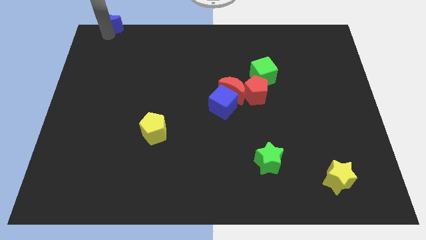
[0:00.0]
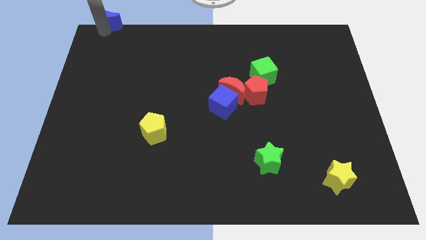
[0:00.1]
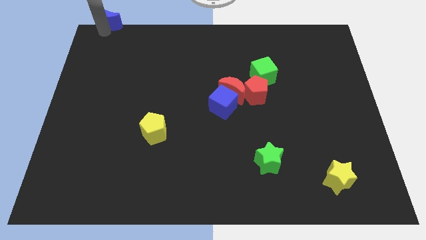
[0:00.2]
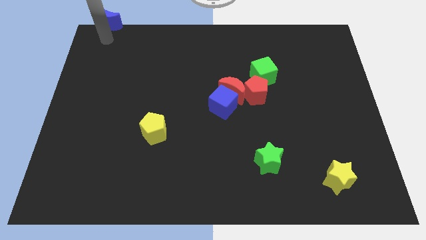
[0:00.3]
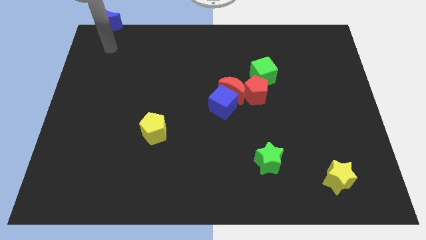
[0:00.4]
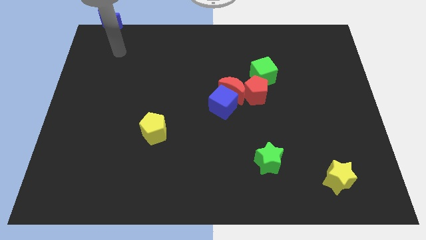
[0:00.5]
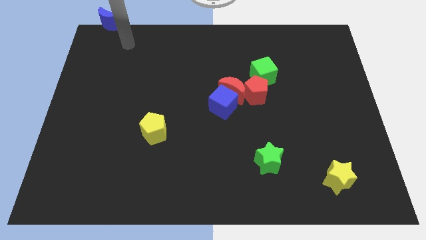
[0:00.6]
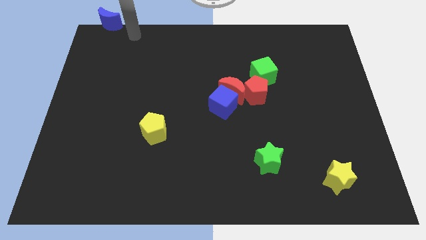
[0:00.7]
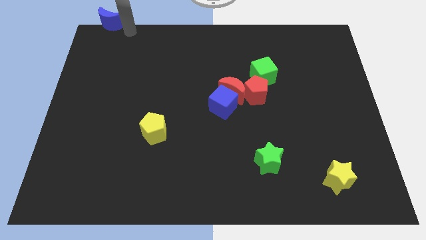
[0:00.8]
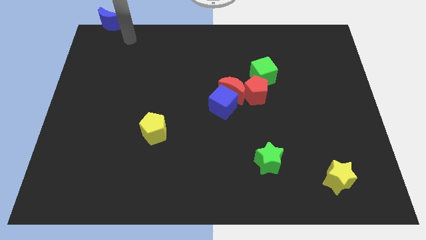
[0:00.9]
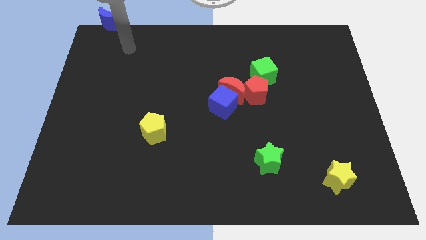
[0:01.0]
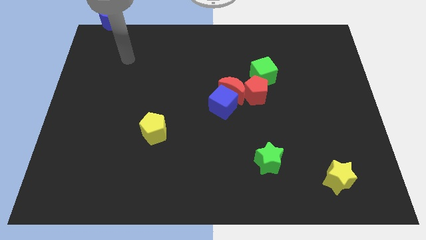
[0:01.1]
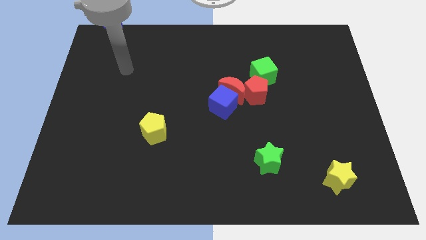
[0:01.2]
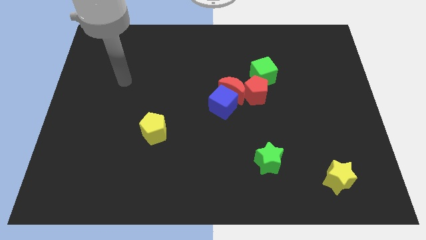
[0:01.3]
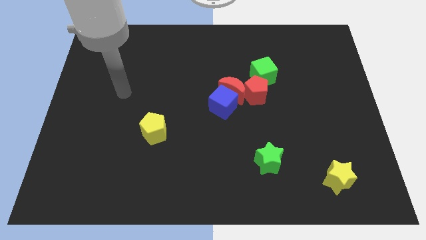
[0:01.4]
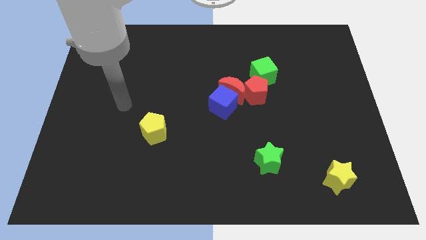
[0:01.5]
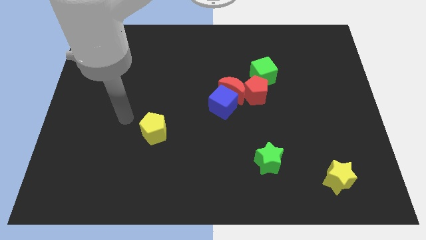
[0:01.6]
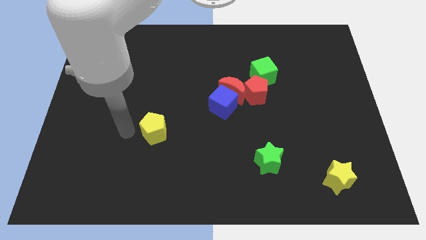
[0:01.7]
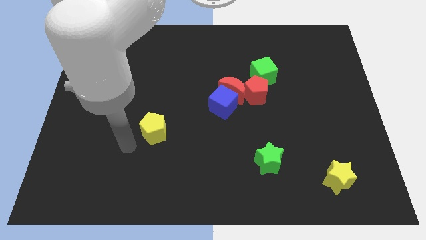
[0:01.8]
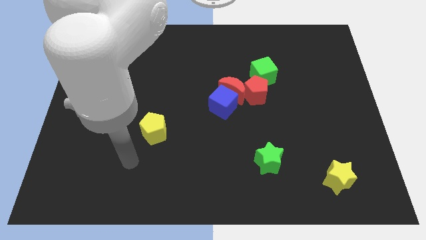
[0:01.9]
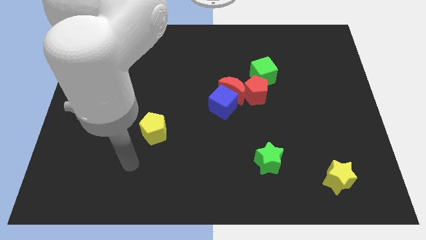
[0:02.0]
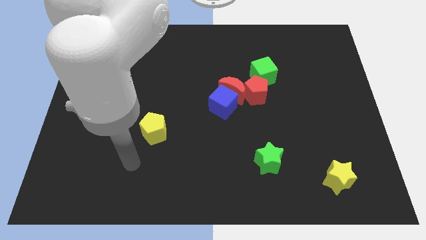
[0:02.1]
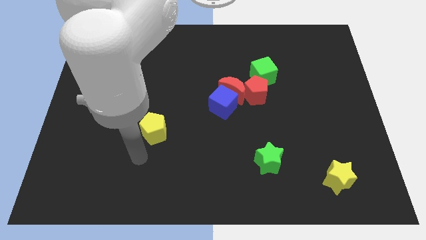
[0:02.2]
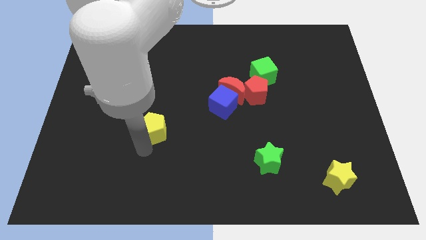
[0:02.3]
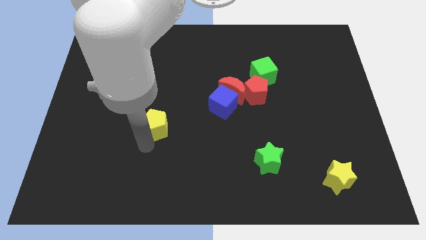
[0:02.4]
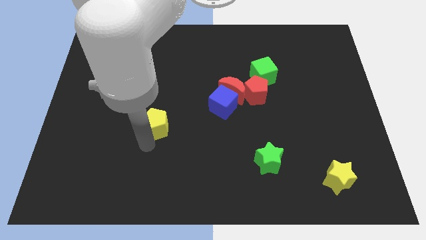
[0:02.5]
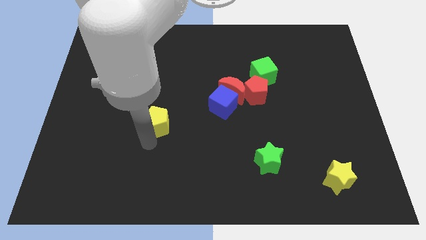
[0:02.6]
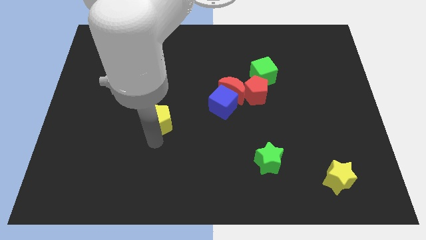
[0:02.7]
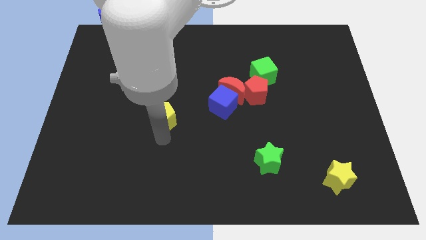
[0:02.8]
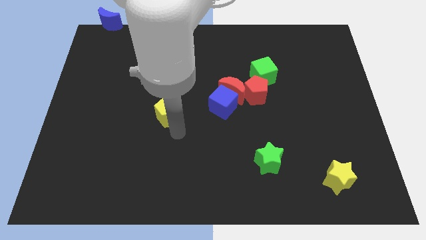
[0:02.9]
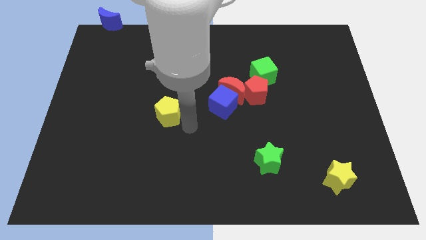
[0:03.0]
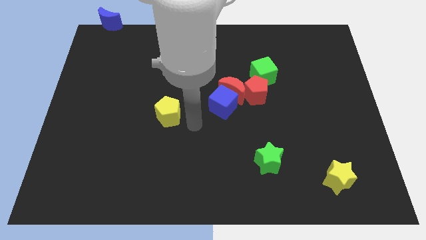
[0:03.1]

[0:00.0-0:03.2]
move your hand down vertically at the bottom of the yellow pentagon

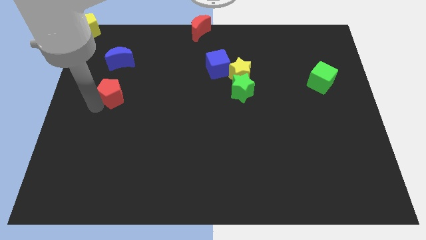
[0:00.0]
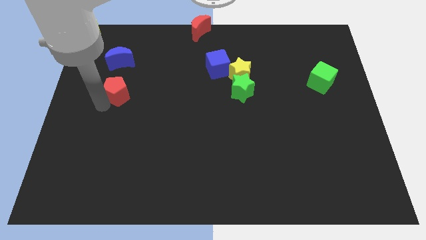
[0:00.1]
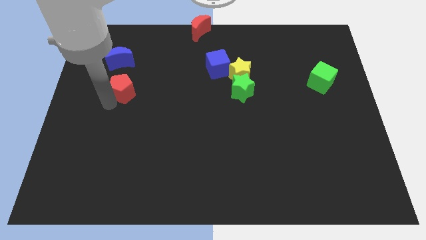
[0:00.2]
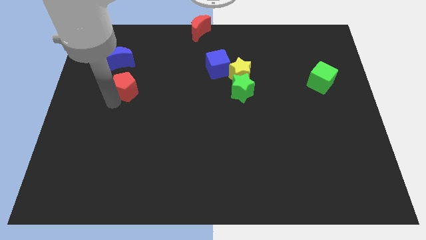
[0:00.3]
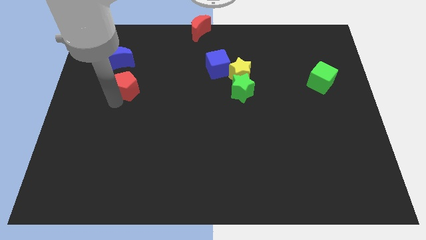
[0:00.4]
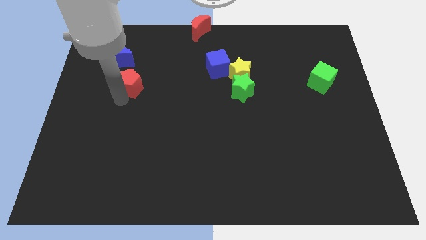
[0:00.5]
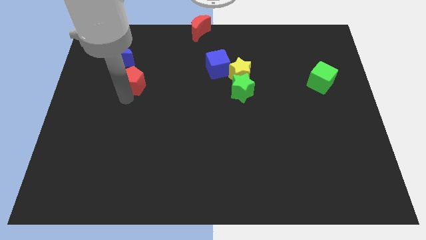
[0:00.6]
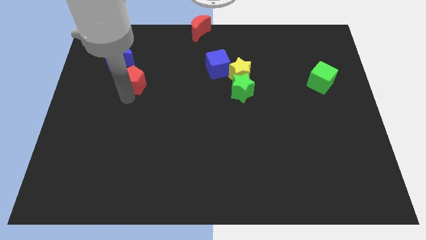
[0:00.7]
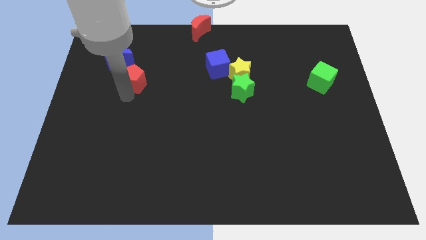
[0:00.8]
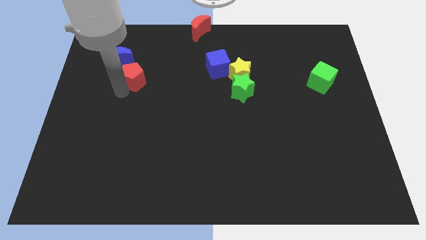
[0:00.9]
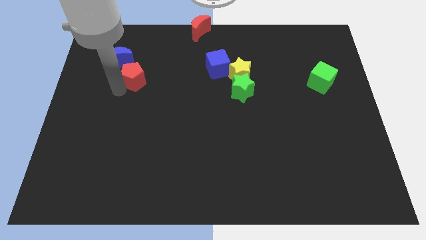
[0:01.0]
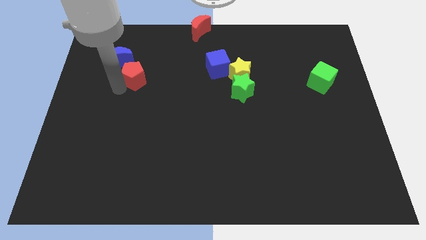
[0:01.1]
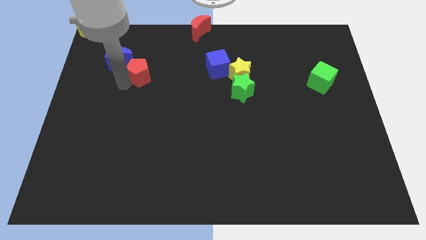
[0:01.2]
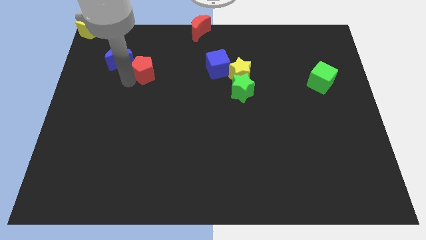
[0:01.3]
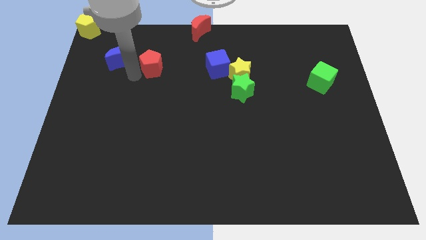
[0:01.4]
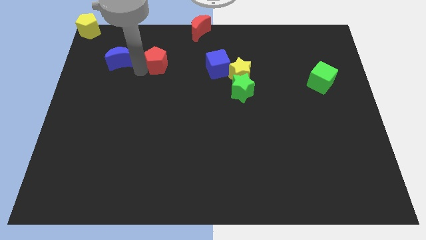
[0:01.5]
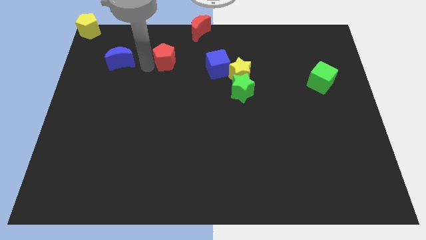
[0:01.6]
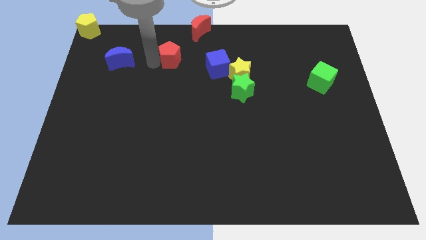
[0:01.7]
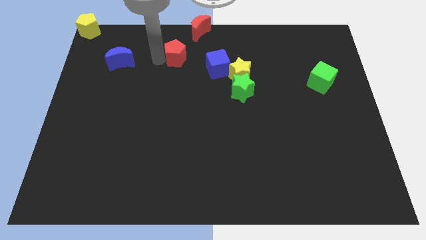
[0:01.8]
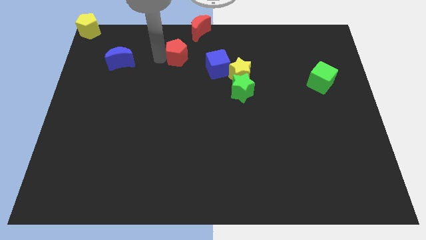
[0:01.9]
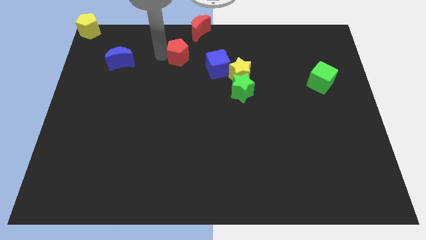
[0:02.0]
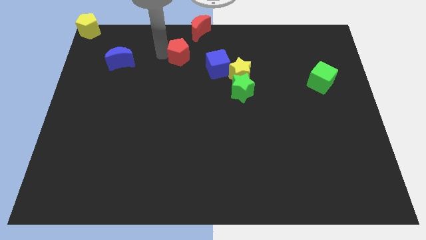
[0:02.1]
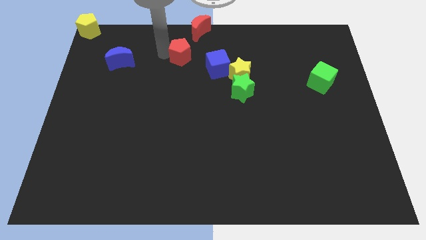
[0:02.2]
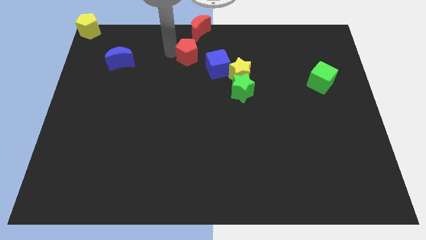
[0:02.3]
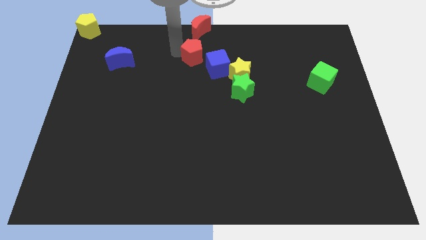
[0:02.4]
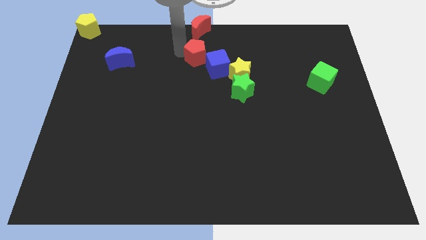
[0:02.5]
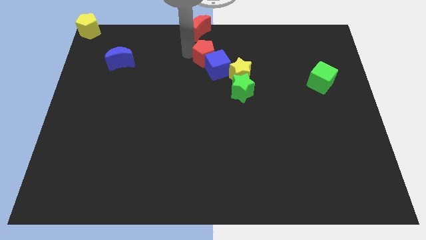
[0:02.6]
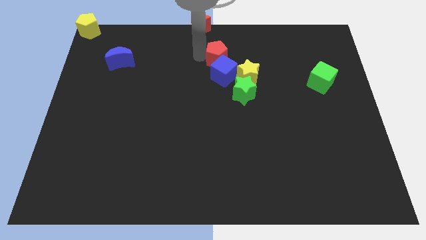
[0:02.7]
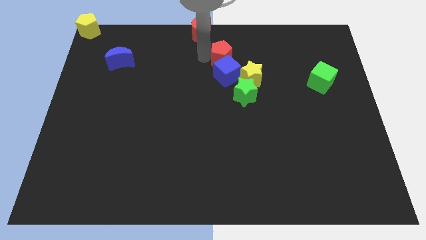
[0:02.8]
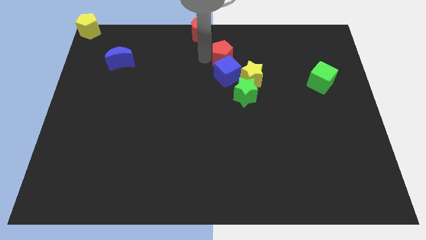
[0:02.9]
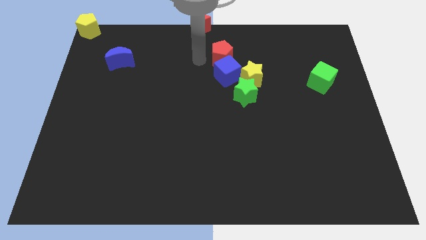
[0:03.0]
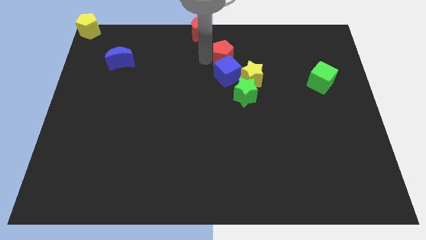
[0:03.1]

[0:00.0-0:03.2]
push red pentagon above blue cube

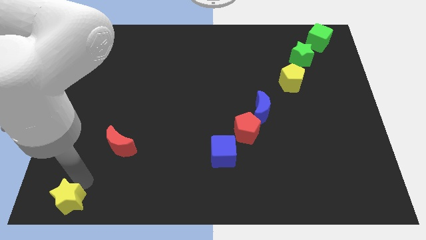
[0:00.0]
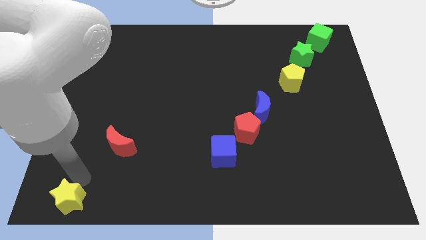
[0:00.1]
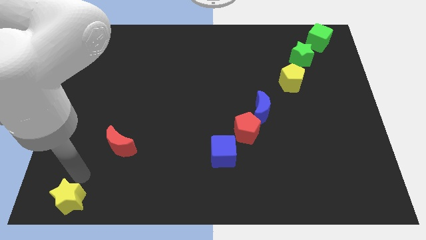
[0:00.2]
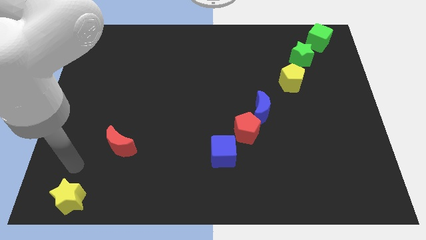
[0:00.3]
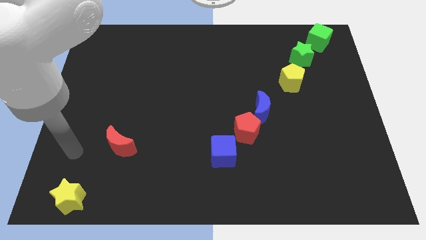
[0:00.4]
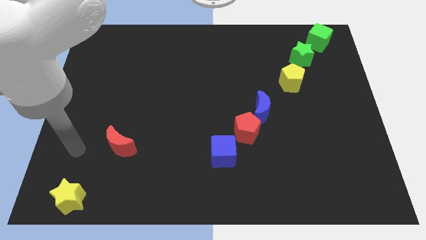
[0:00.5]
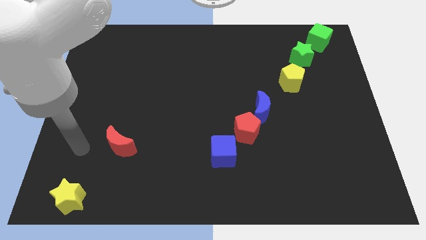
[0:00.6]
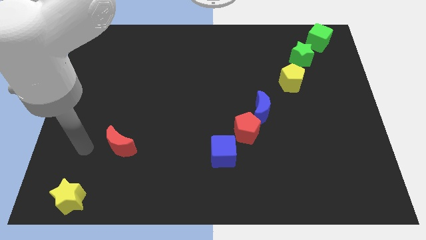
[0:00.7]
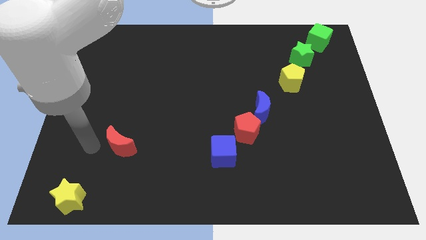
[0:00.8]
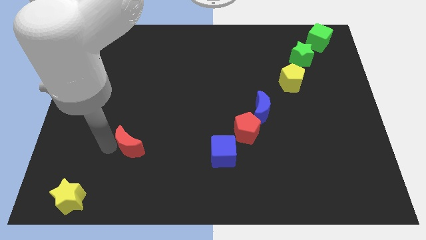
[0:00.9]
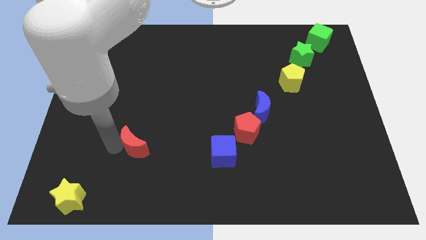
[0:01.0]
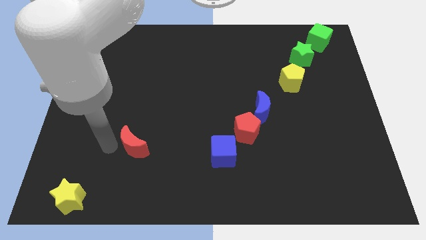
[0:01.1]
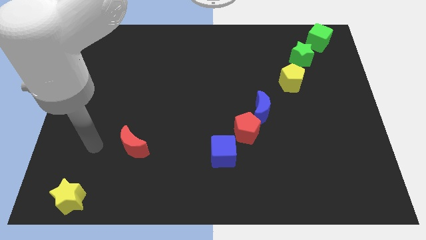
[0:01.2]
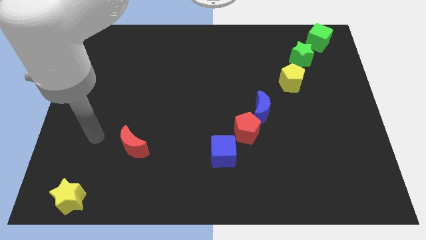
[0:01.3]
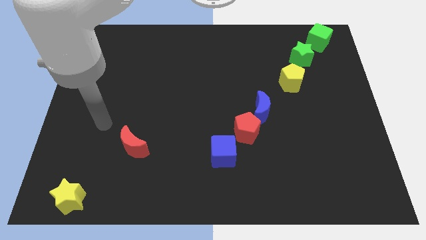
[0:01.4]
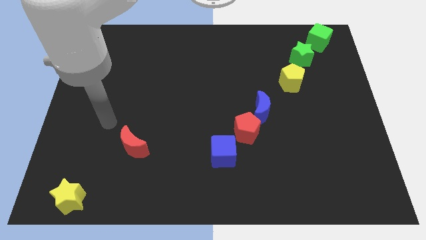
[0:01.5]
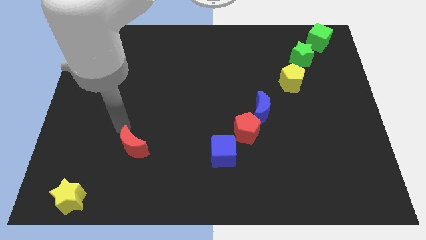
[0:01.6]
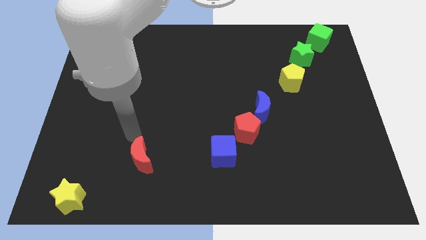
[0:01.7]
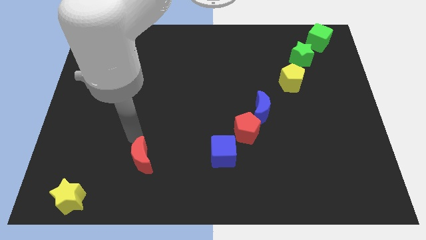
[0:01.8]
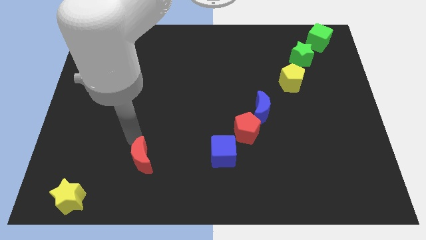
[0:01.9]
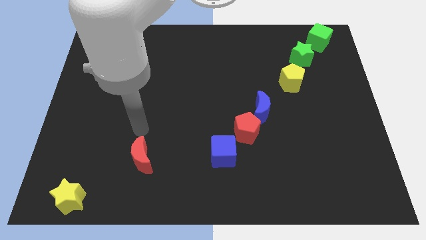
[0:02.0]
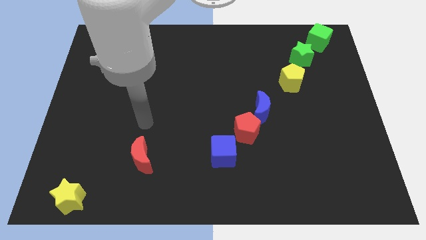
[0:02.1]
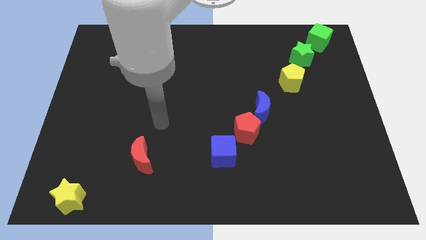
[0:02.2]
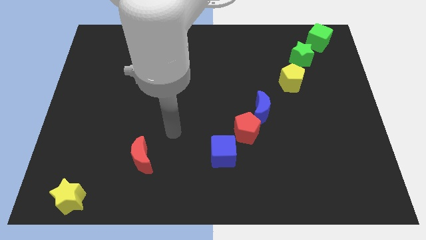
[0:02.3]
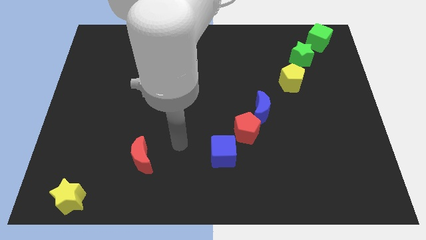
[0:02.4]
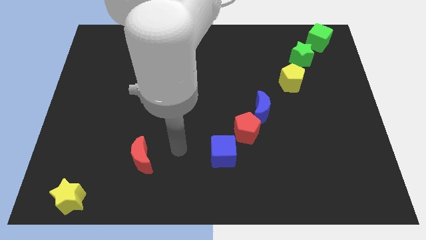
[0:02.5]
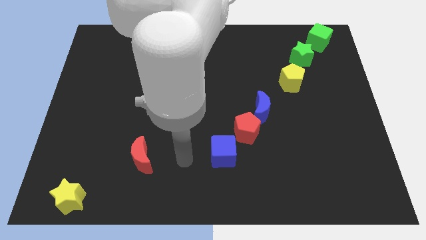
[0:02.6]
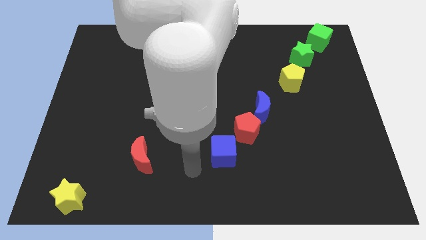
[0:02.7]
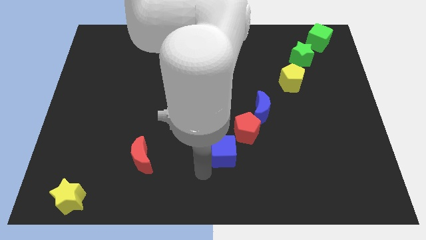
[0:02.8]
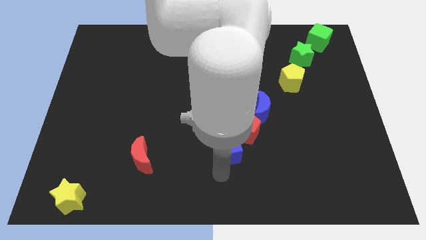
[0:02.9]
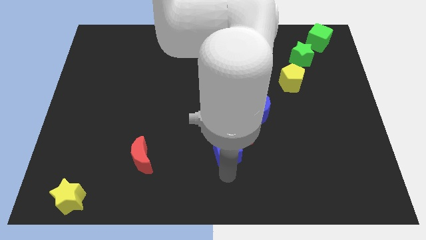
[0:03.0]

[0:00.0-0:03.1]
place the red moon diagonally above the top right side of the yellow star
